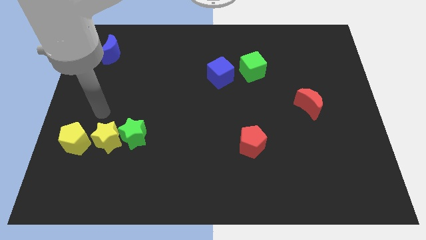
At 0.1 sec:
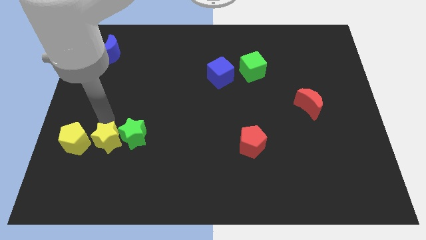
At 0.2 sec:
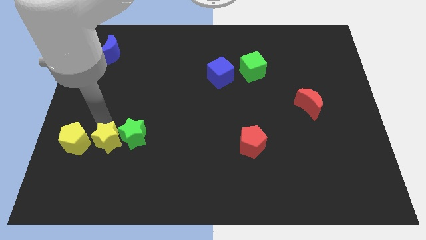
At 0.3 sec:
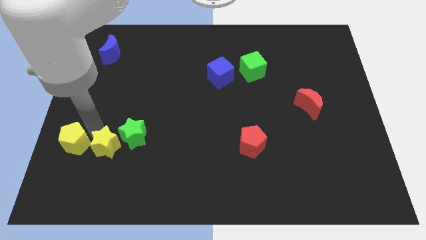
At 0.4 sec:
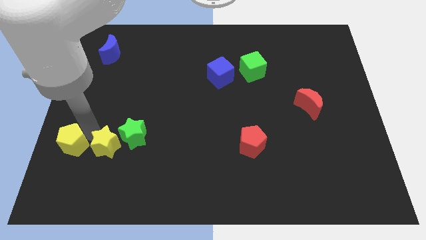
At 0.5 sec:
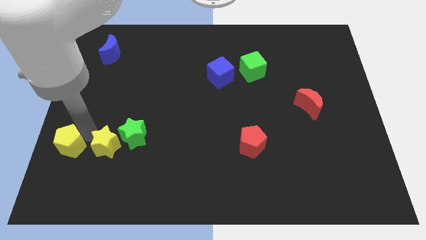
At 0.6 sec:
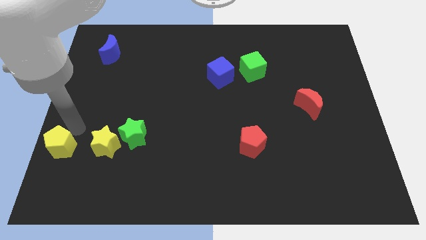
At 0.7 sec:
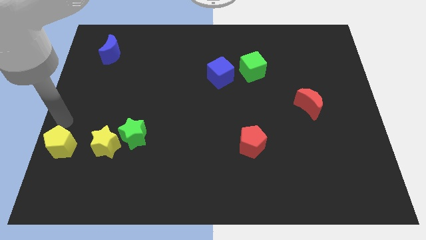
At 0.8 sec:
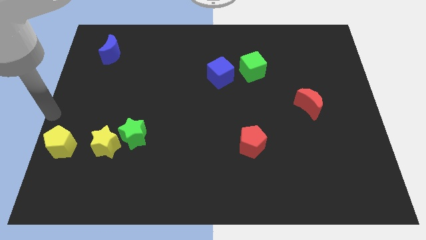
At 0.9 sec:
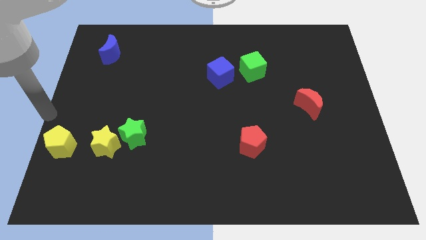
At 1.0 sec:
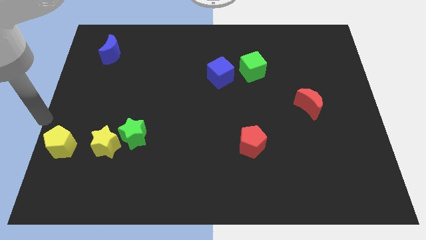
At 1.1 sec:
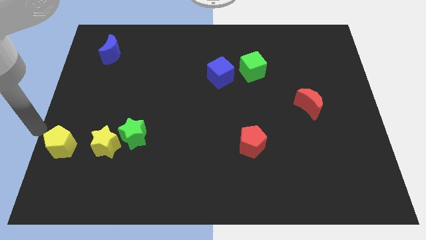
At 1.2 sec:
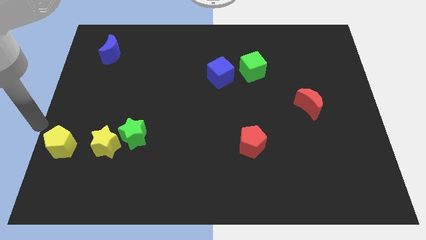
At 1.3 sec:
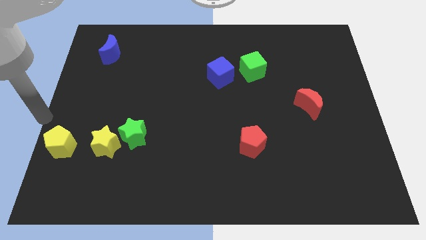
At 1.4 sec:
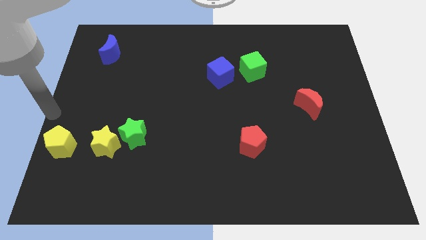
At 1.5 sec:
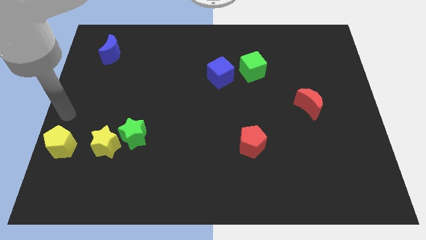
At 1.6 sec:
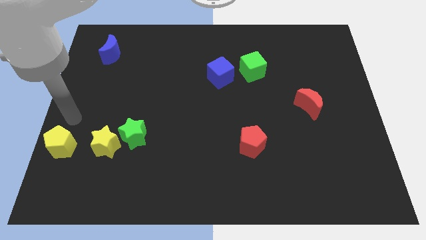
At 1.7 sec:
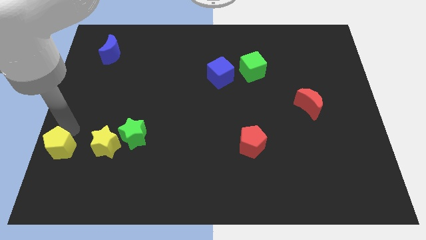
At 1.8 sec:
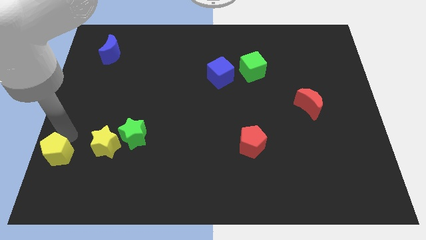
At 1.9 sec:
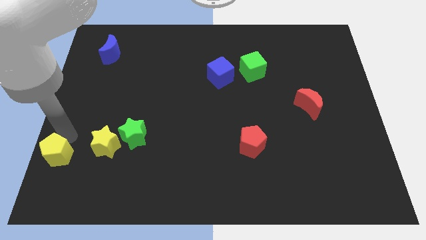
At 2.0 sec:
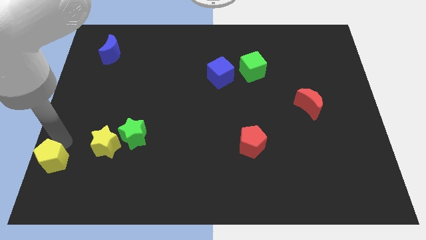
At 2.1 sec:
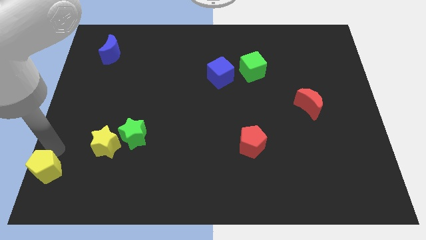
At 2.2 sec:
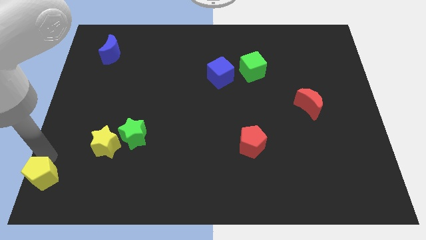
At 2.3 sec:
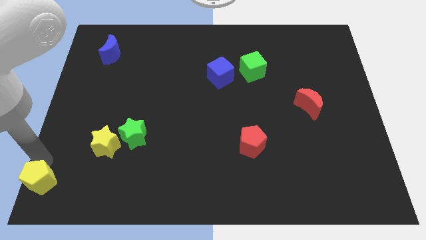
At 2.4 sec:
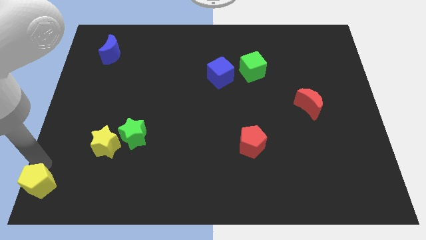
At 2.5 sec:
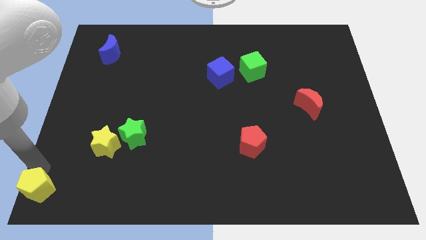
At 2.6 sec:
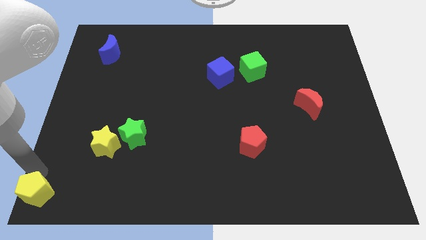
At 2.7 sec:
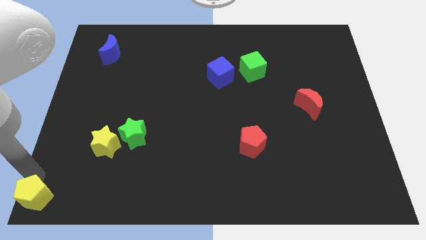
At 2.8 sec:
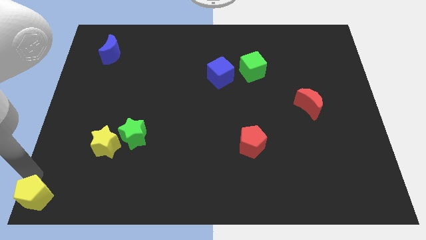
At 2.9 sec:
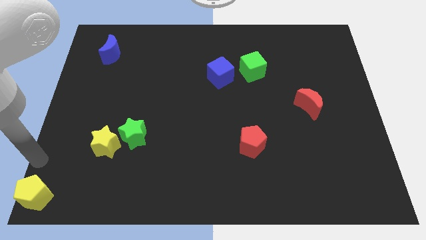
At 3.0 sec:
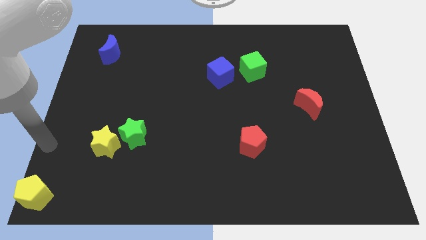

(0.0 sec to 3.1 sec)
push the yellow pentagon towards the bottom left corner of the board

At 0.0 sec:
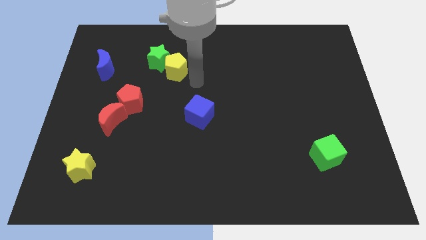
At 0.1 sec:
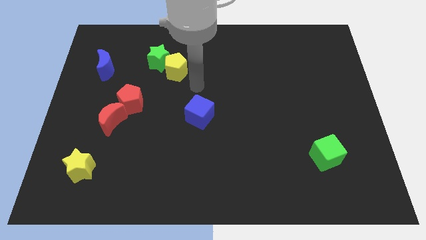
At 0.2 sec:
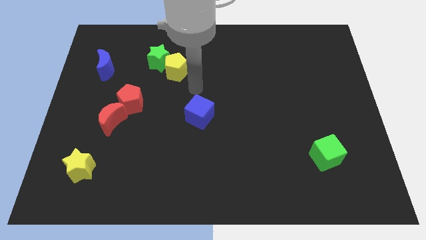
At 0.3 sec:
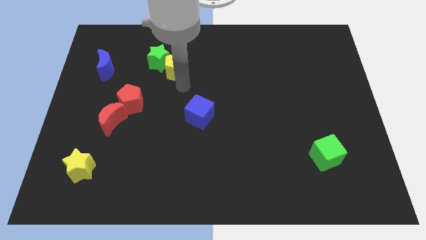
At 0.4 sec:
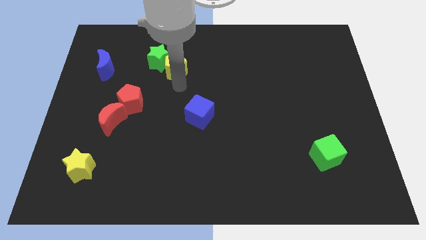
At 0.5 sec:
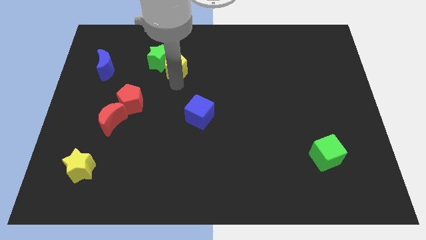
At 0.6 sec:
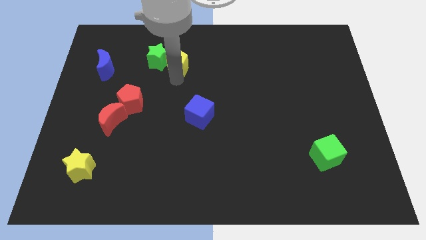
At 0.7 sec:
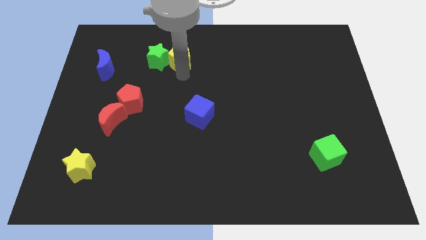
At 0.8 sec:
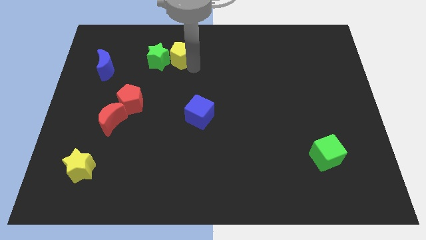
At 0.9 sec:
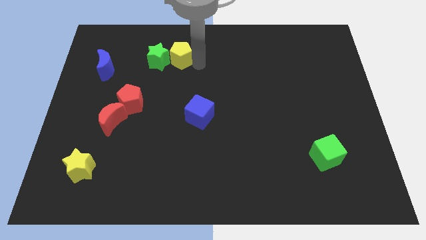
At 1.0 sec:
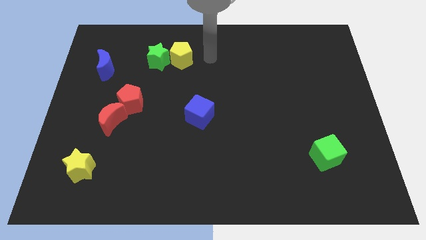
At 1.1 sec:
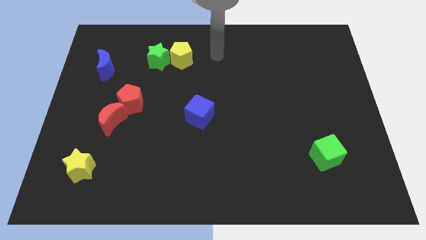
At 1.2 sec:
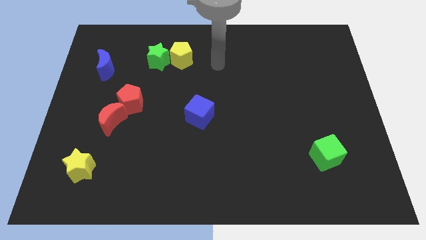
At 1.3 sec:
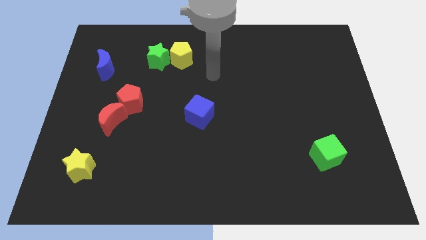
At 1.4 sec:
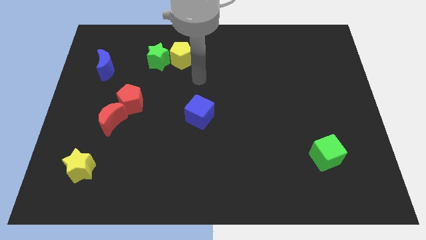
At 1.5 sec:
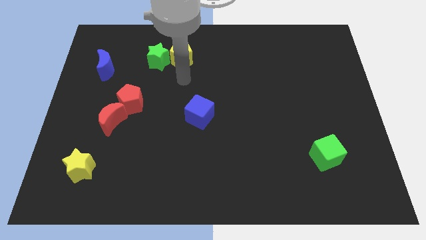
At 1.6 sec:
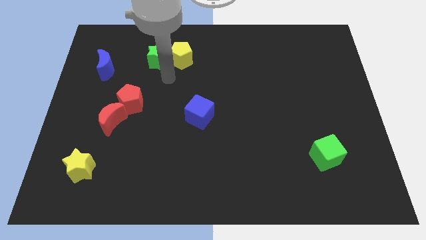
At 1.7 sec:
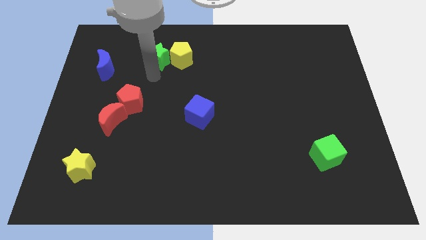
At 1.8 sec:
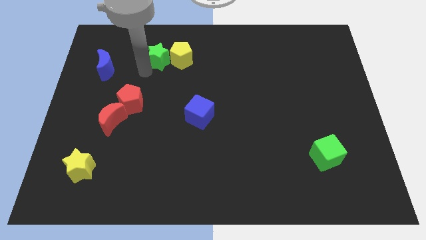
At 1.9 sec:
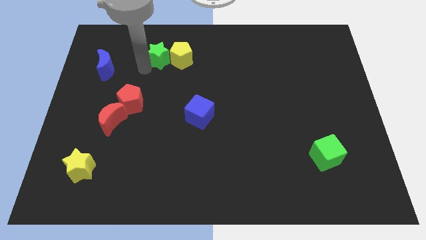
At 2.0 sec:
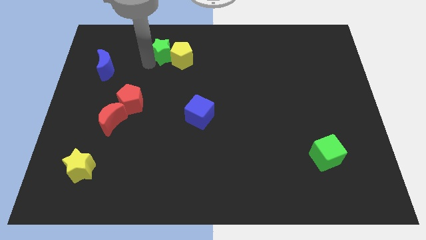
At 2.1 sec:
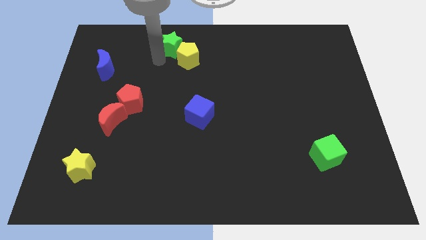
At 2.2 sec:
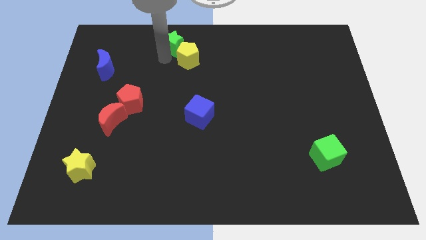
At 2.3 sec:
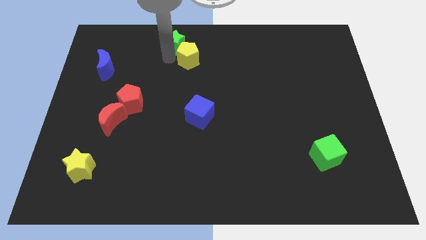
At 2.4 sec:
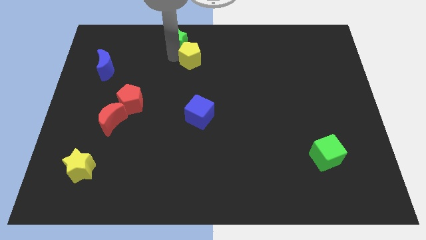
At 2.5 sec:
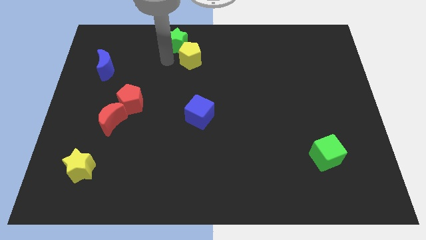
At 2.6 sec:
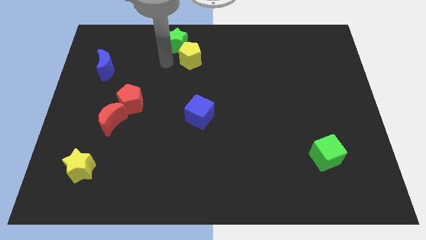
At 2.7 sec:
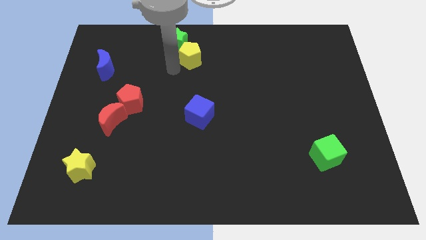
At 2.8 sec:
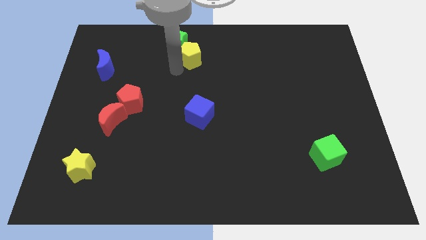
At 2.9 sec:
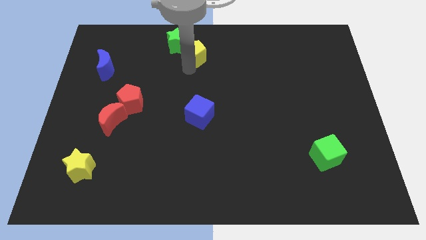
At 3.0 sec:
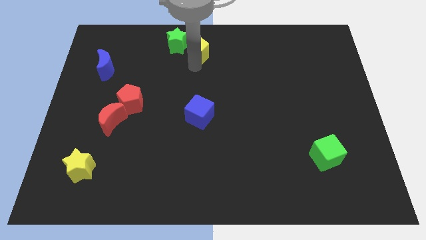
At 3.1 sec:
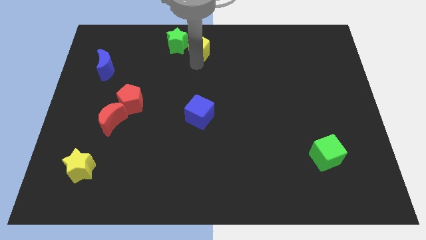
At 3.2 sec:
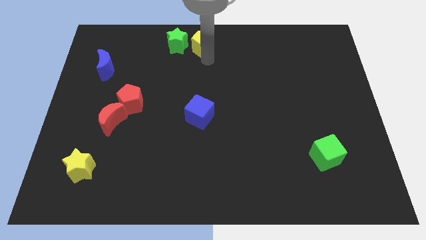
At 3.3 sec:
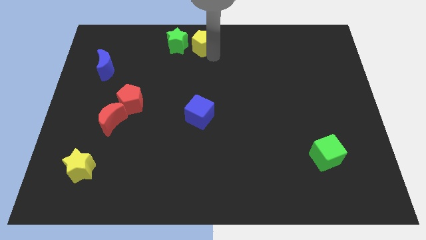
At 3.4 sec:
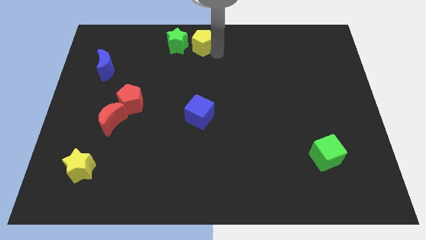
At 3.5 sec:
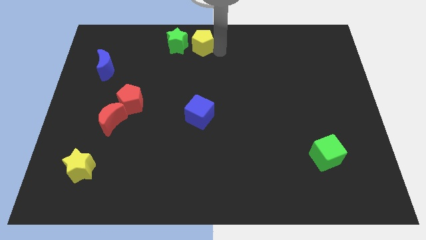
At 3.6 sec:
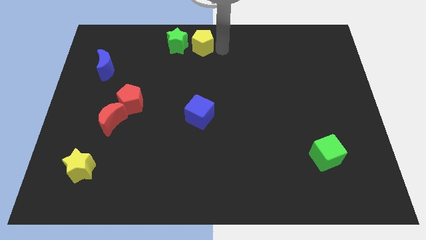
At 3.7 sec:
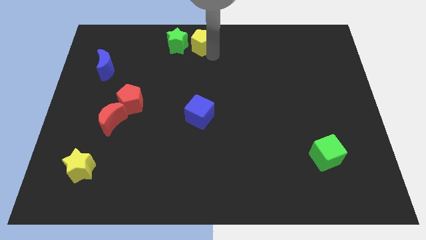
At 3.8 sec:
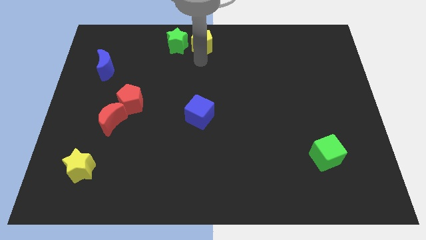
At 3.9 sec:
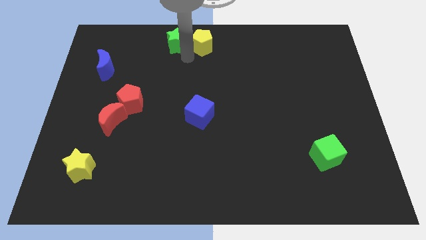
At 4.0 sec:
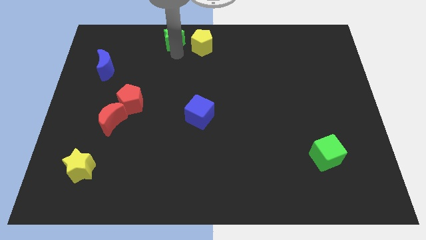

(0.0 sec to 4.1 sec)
push the yellow pentagon towards the right side of the green star

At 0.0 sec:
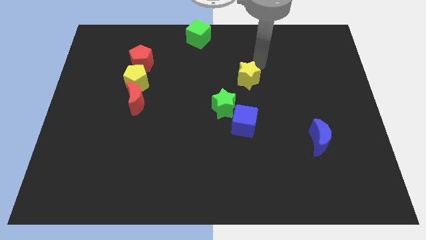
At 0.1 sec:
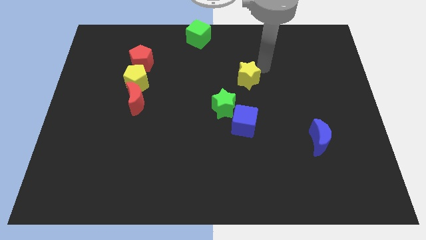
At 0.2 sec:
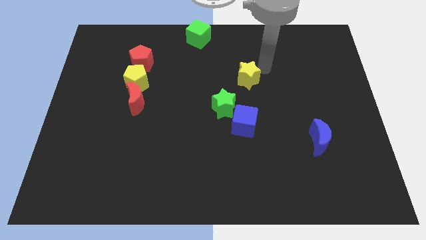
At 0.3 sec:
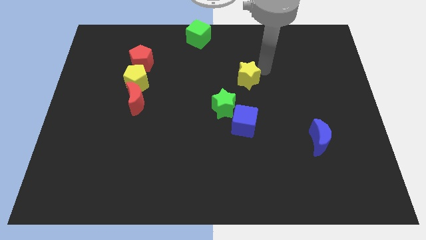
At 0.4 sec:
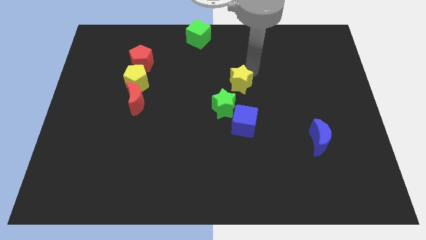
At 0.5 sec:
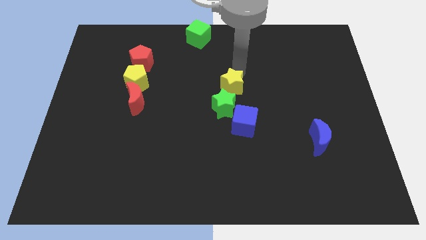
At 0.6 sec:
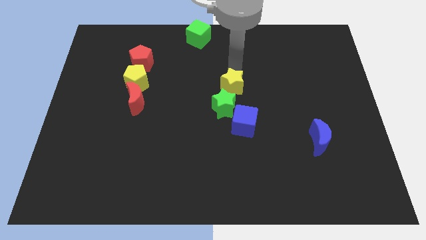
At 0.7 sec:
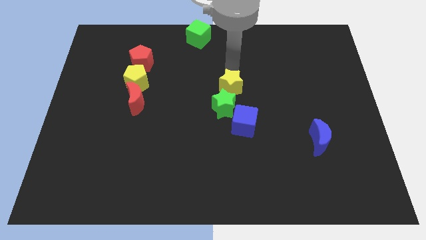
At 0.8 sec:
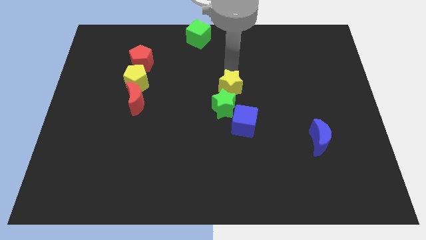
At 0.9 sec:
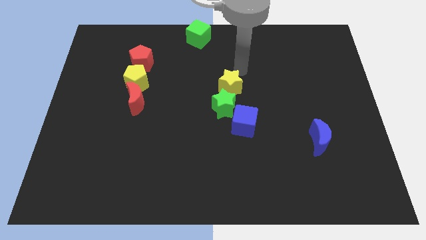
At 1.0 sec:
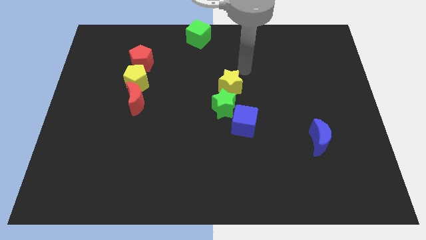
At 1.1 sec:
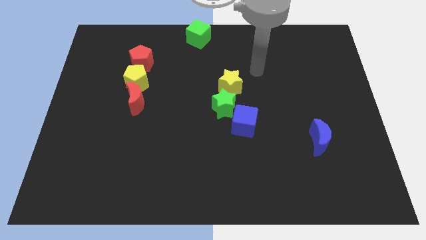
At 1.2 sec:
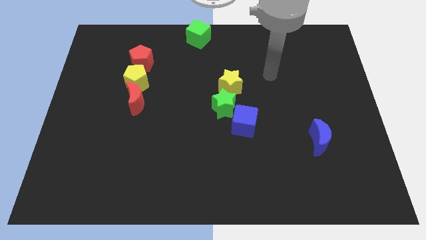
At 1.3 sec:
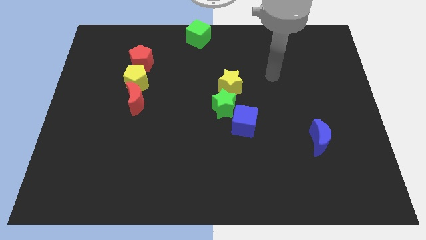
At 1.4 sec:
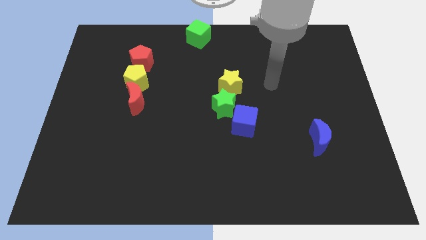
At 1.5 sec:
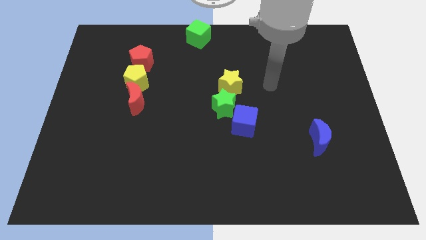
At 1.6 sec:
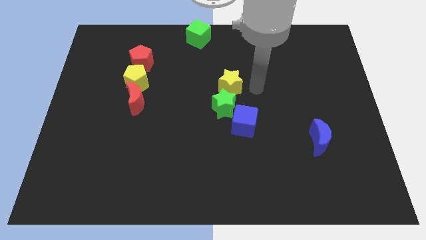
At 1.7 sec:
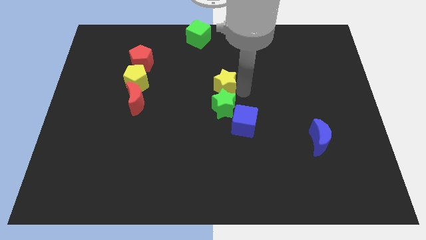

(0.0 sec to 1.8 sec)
push the yellow star close to the green star
